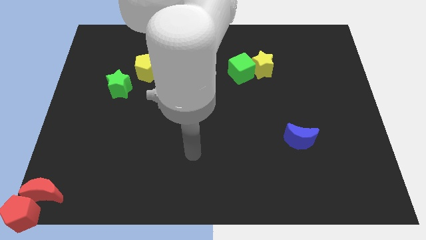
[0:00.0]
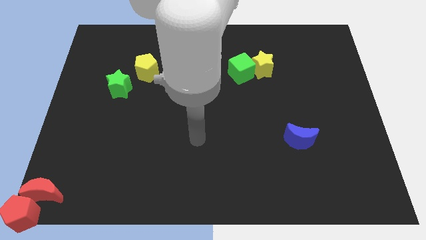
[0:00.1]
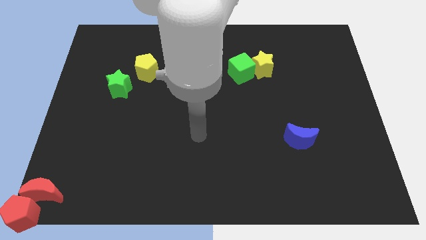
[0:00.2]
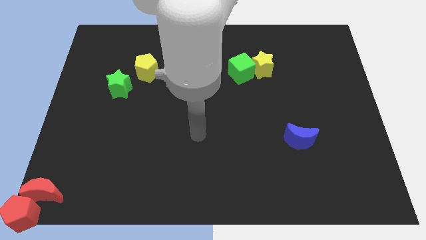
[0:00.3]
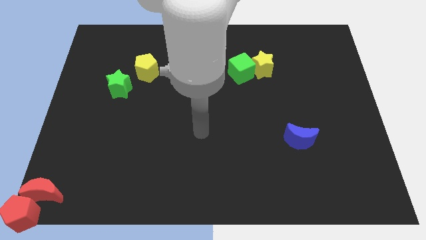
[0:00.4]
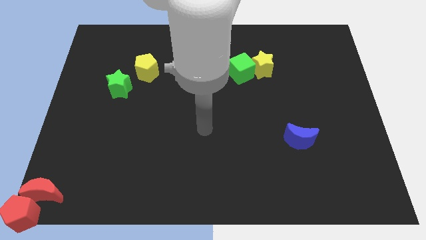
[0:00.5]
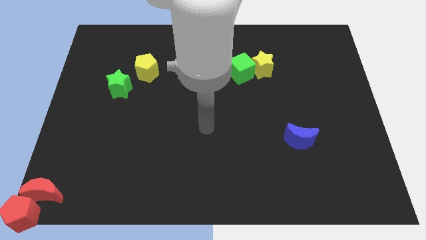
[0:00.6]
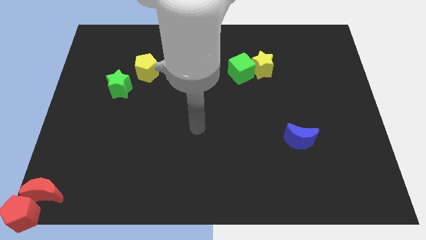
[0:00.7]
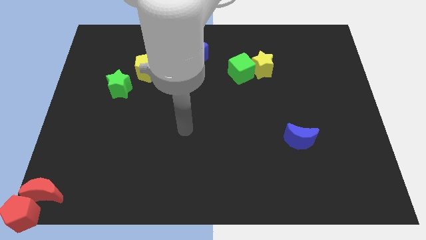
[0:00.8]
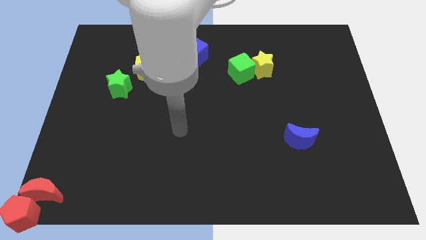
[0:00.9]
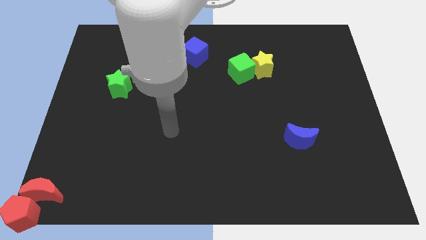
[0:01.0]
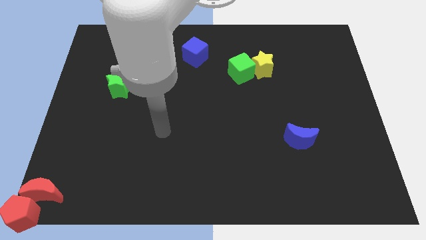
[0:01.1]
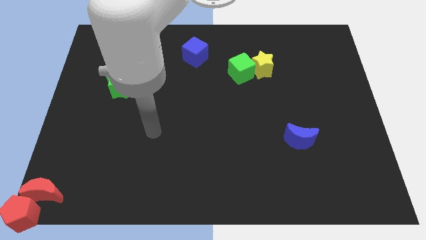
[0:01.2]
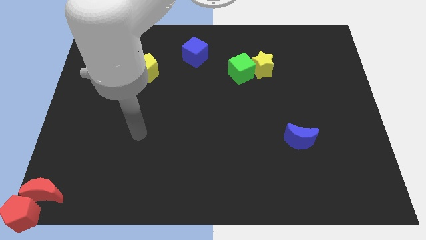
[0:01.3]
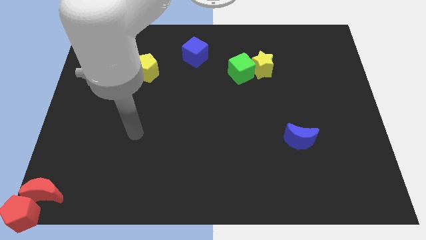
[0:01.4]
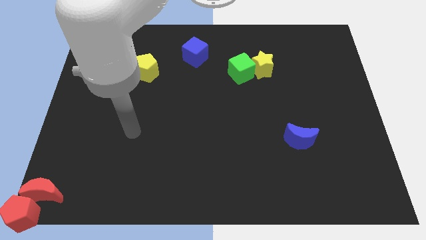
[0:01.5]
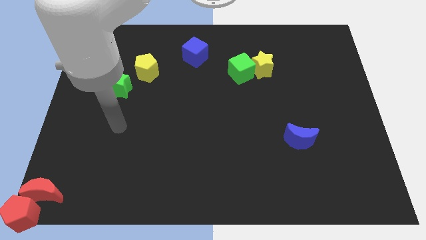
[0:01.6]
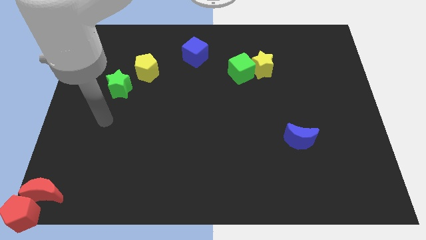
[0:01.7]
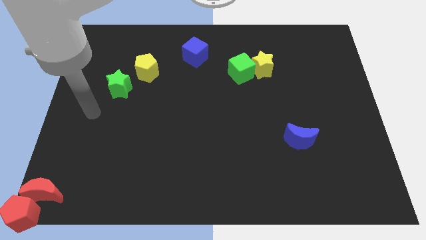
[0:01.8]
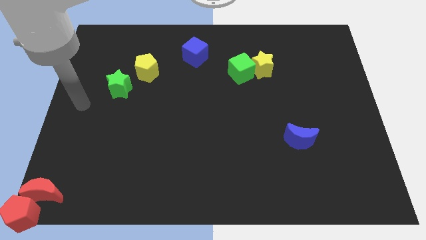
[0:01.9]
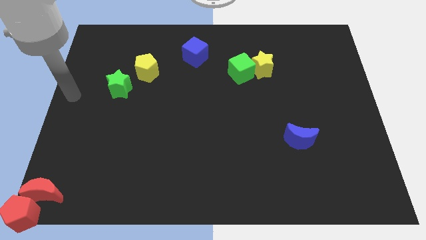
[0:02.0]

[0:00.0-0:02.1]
place your arm to the left of green star

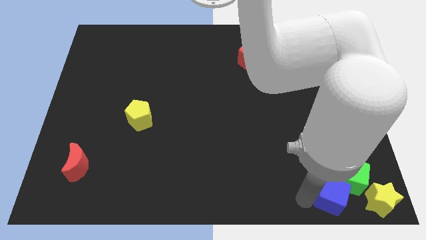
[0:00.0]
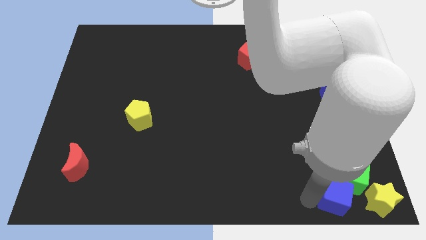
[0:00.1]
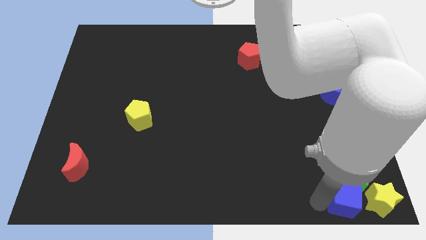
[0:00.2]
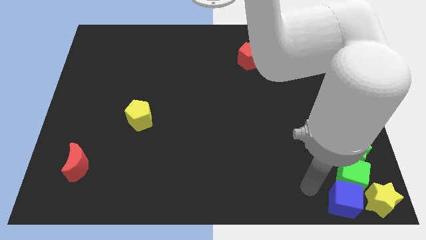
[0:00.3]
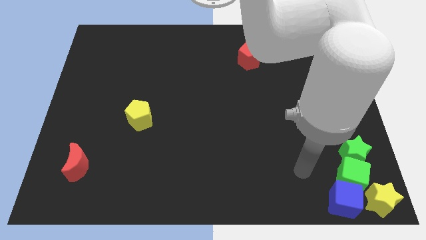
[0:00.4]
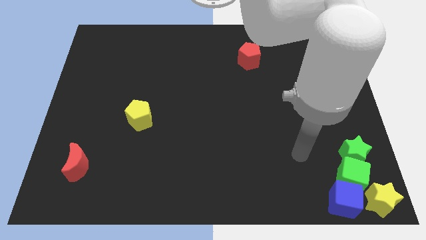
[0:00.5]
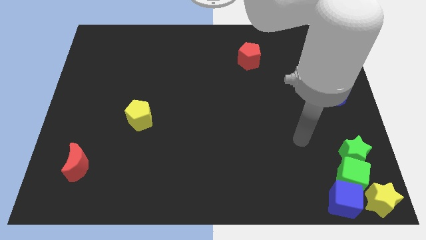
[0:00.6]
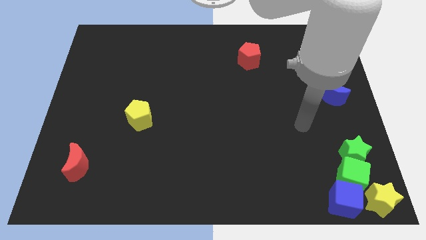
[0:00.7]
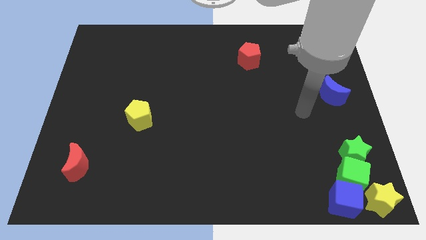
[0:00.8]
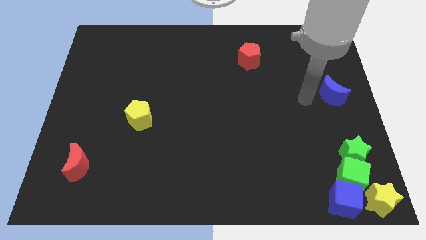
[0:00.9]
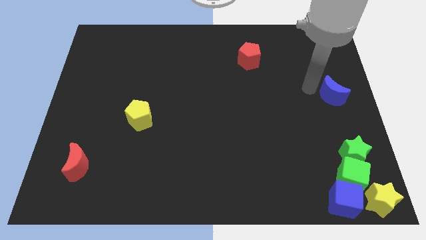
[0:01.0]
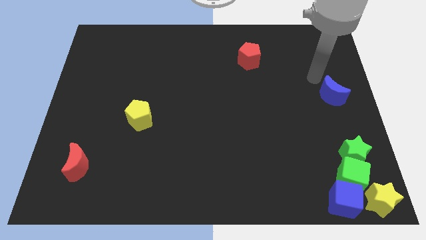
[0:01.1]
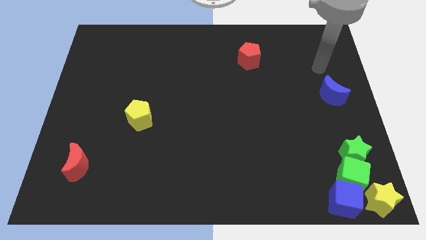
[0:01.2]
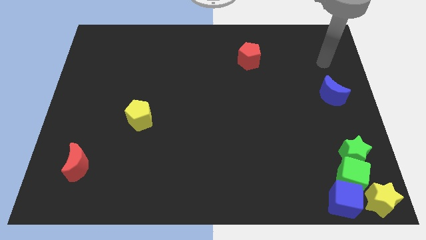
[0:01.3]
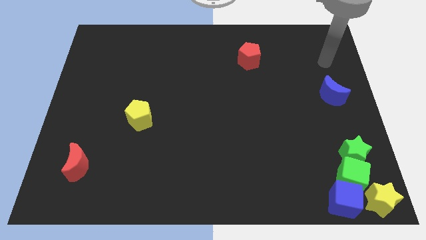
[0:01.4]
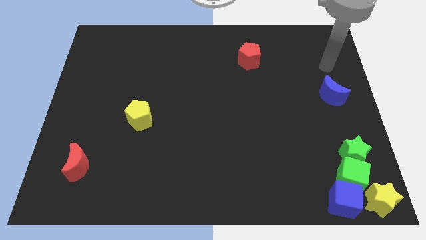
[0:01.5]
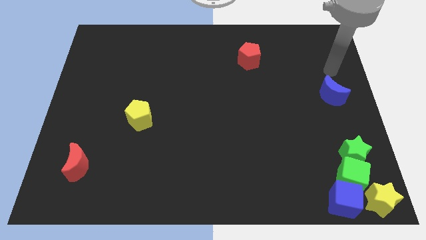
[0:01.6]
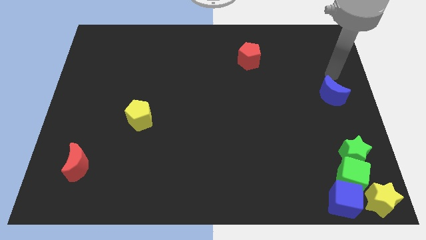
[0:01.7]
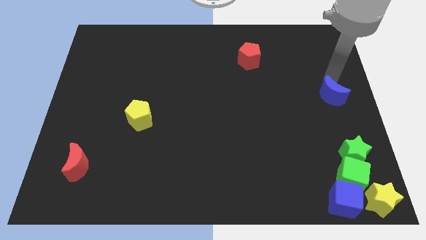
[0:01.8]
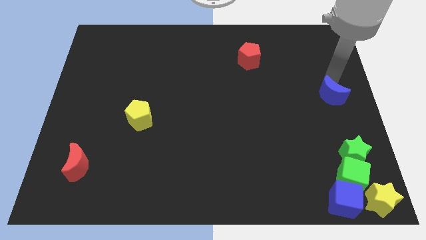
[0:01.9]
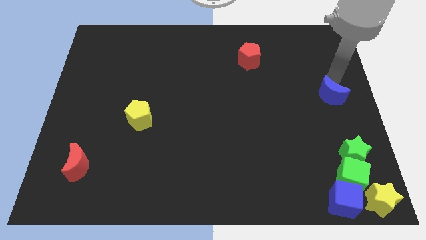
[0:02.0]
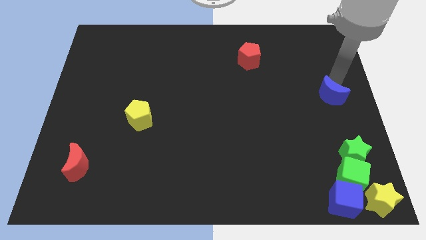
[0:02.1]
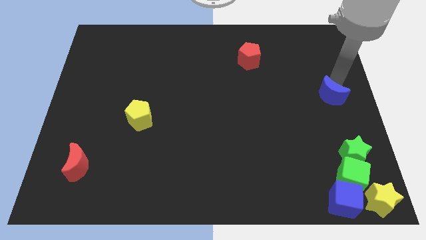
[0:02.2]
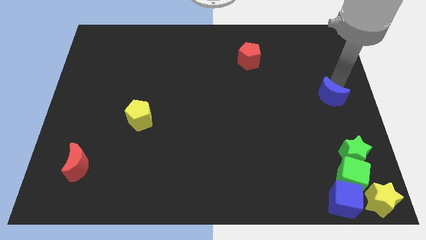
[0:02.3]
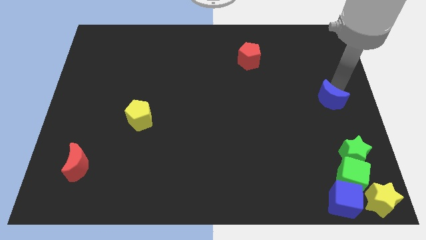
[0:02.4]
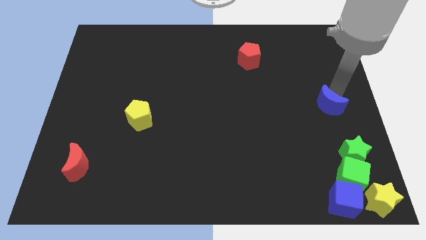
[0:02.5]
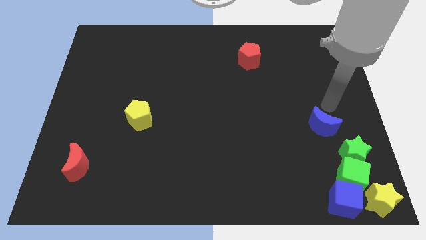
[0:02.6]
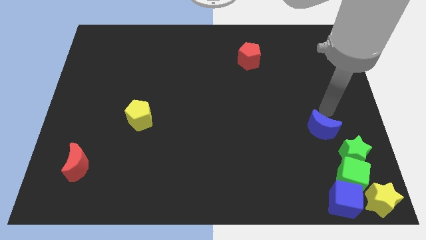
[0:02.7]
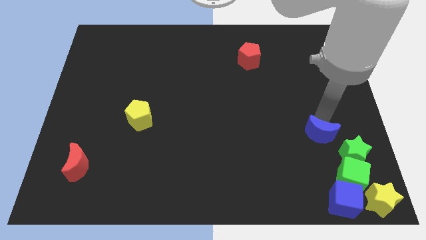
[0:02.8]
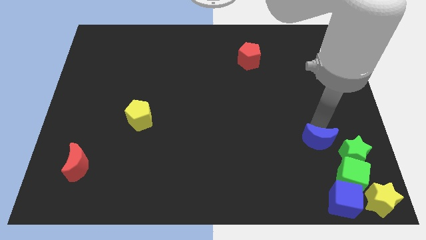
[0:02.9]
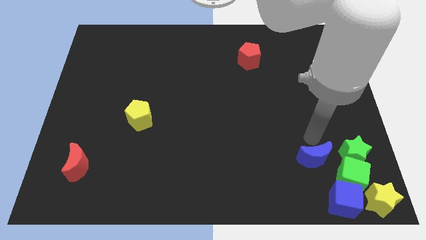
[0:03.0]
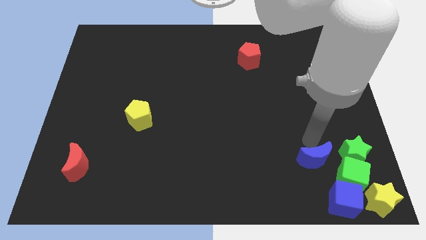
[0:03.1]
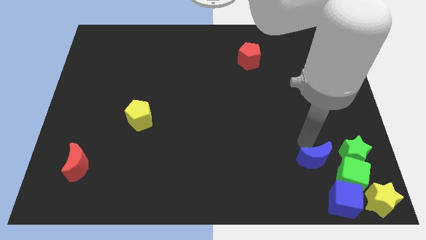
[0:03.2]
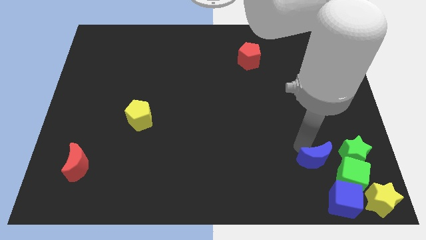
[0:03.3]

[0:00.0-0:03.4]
place blue moon to the left of green star

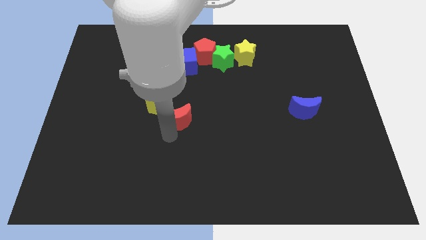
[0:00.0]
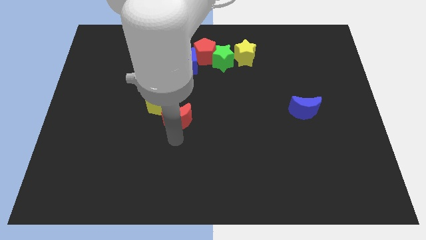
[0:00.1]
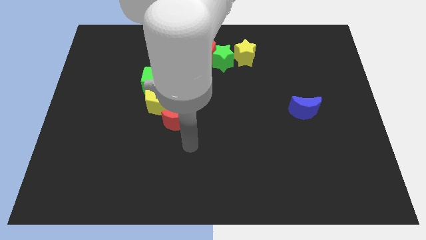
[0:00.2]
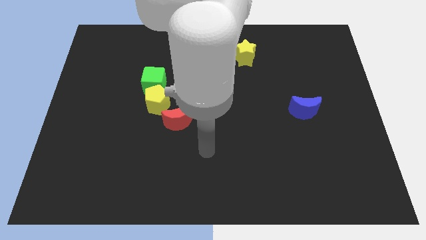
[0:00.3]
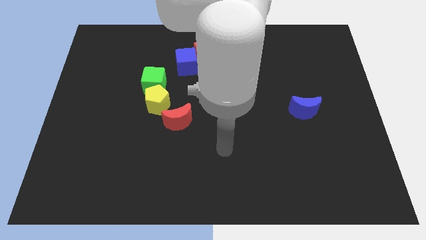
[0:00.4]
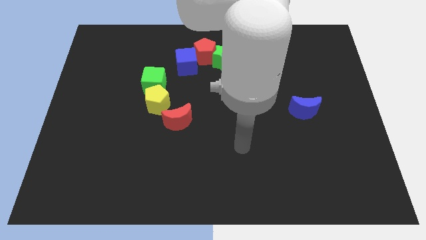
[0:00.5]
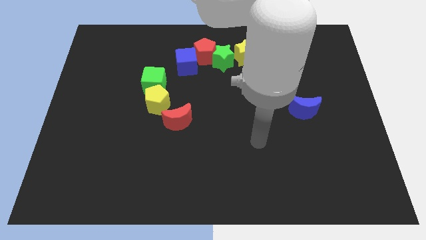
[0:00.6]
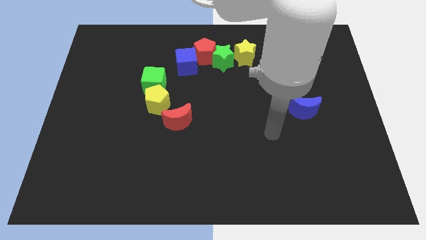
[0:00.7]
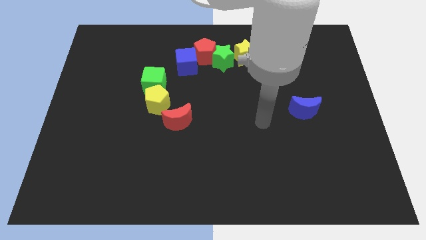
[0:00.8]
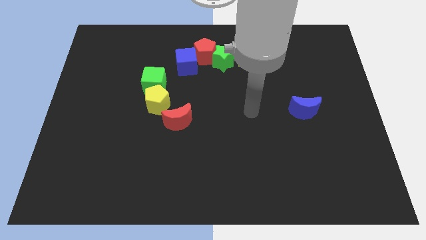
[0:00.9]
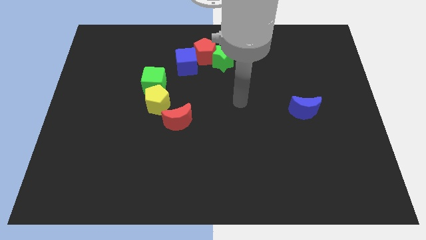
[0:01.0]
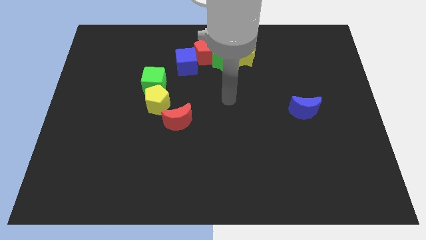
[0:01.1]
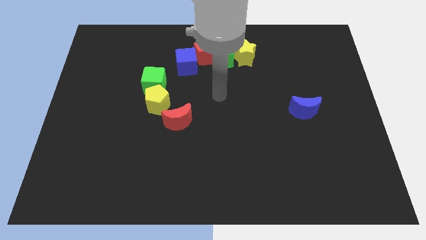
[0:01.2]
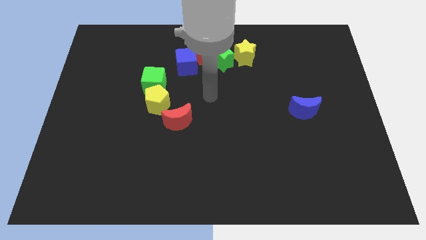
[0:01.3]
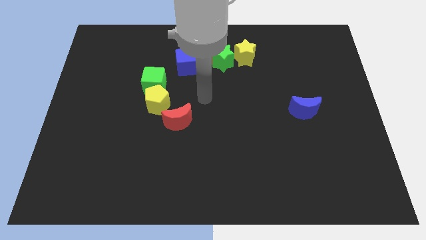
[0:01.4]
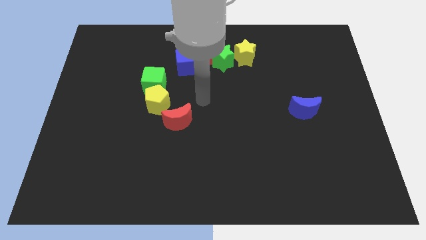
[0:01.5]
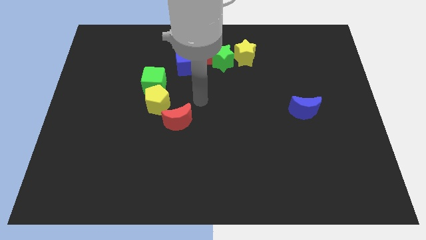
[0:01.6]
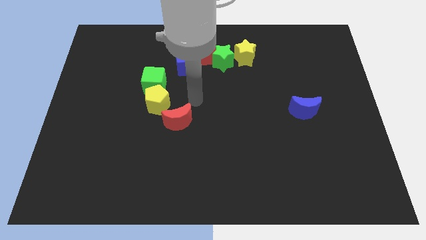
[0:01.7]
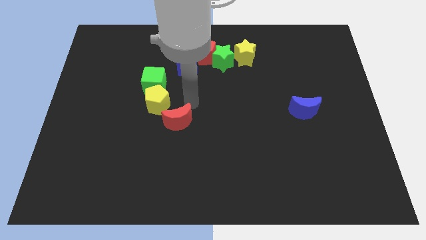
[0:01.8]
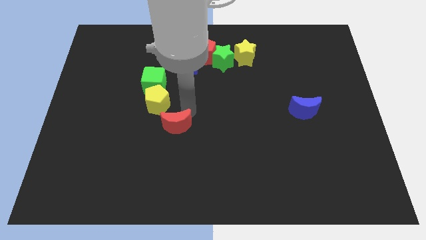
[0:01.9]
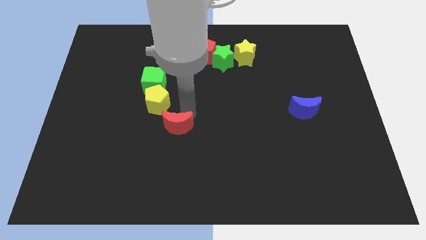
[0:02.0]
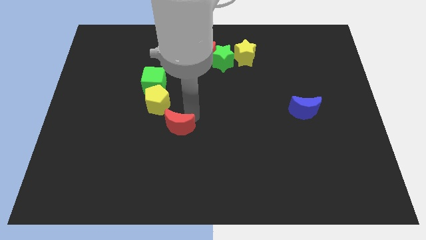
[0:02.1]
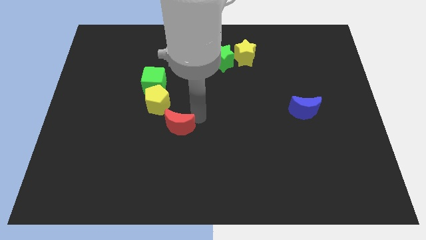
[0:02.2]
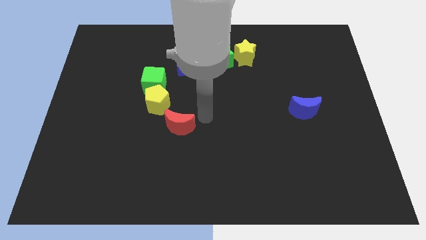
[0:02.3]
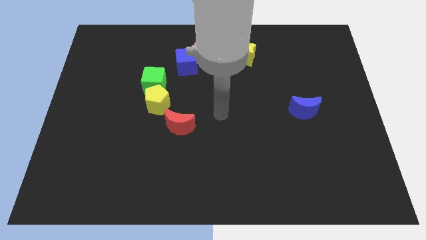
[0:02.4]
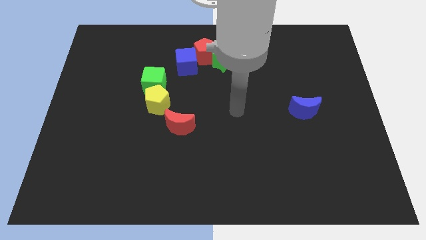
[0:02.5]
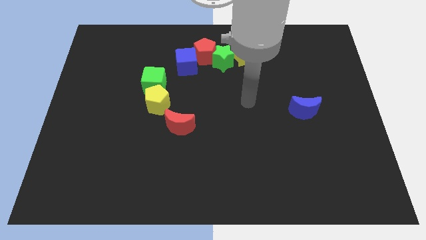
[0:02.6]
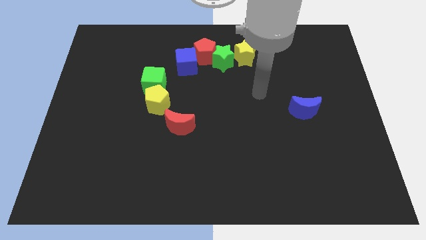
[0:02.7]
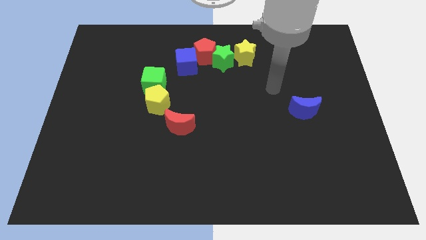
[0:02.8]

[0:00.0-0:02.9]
move the red crescent slightly downwards

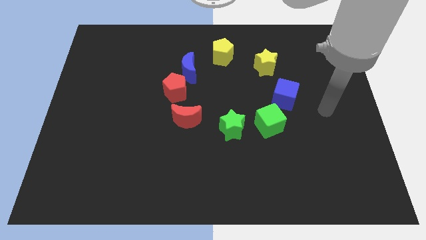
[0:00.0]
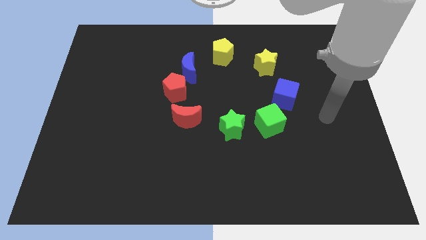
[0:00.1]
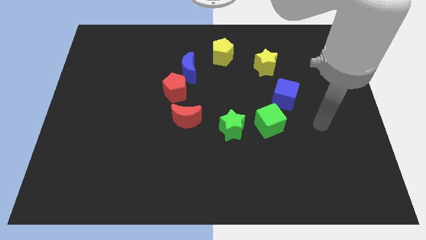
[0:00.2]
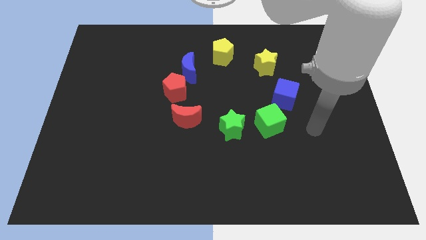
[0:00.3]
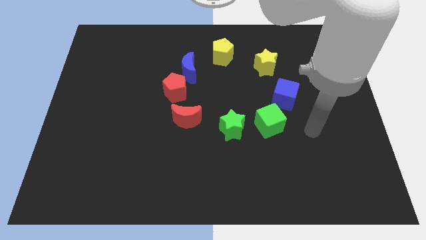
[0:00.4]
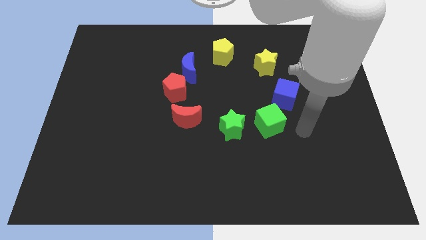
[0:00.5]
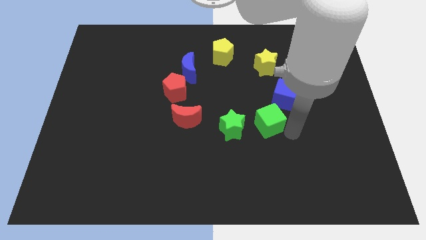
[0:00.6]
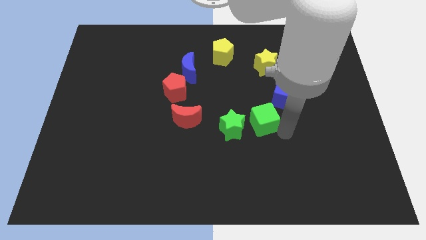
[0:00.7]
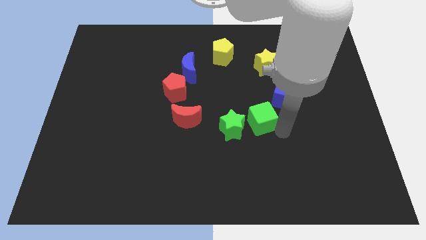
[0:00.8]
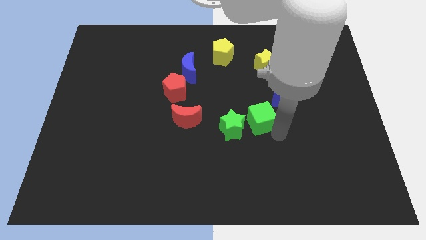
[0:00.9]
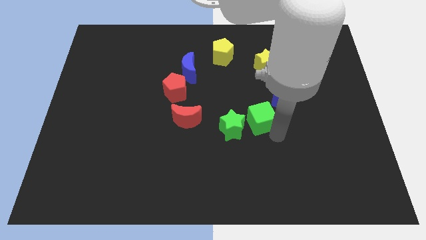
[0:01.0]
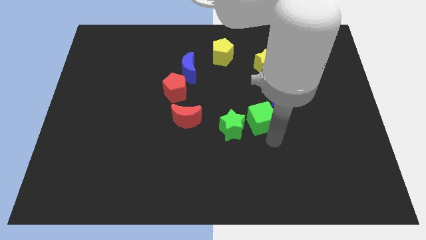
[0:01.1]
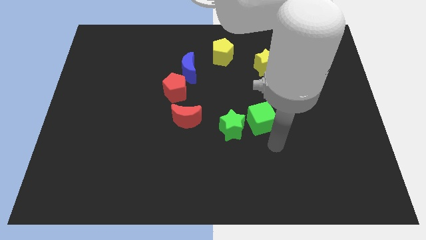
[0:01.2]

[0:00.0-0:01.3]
move the green cube close to the green star
